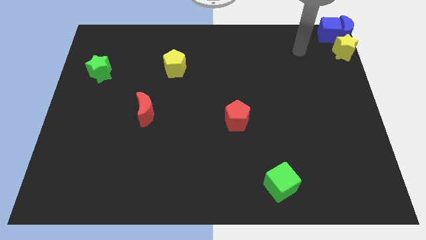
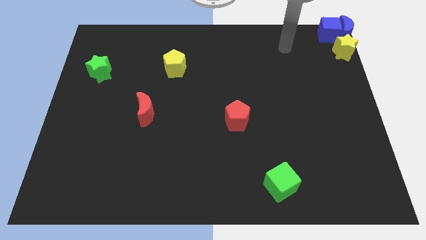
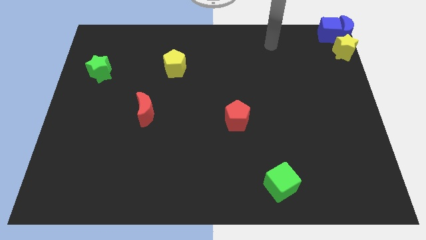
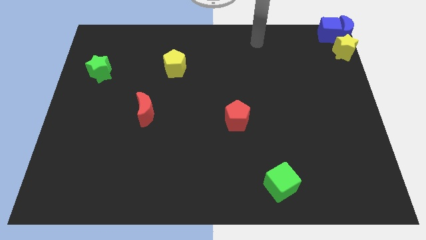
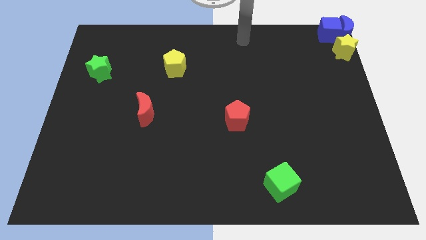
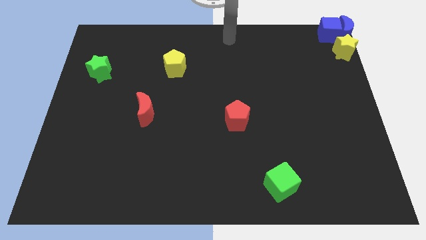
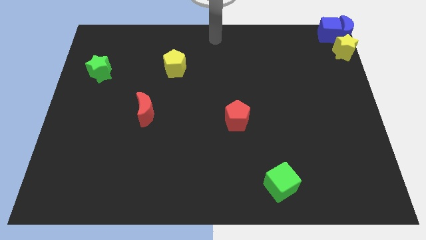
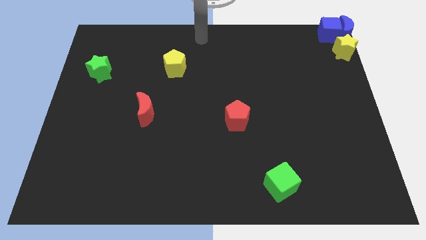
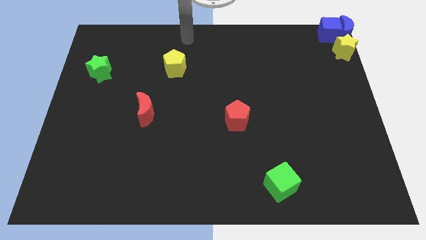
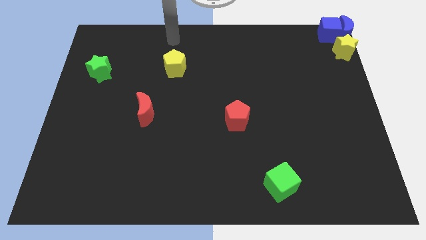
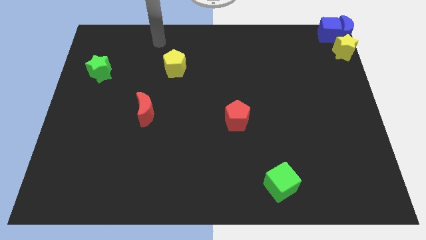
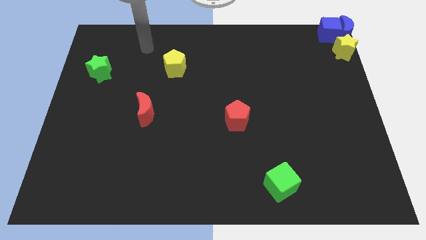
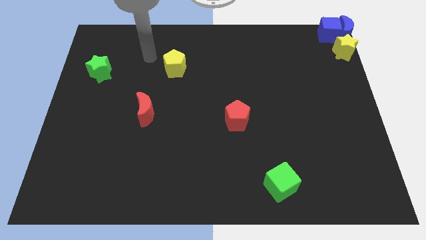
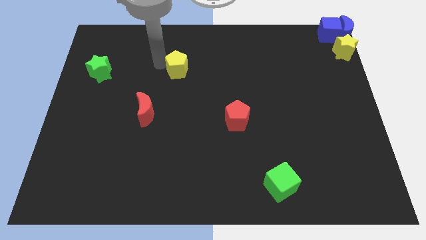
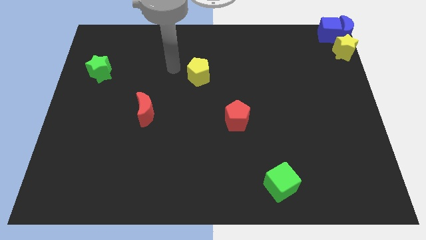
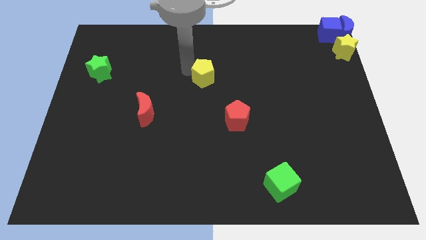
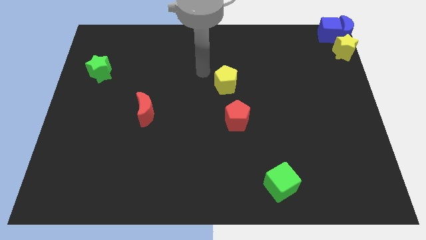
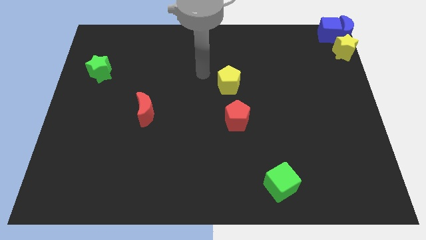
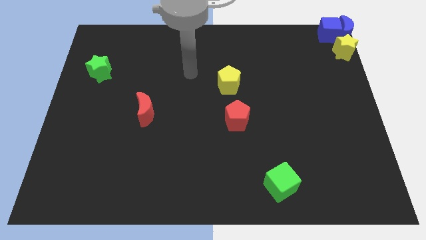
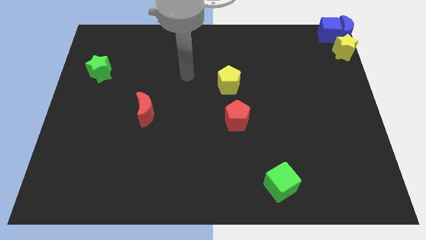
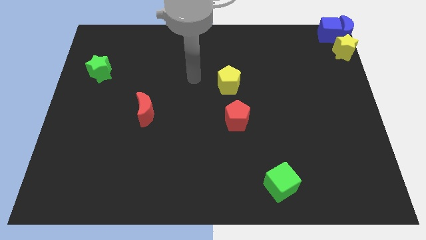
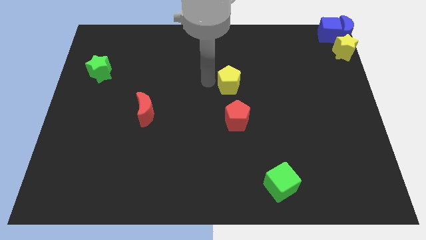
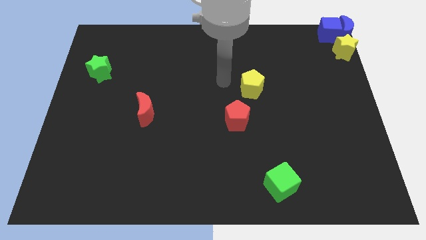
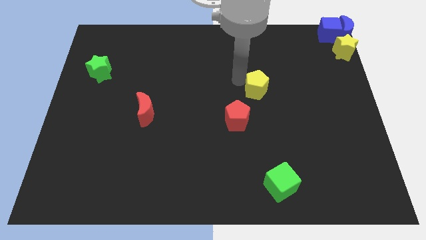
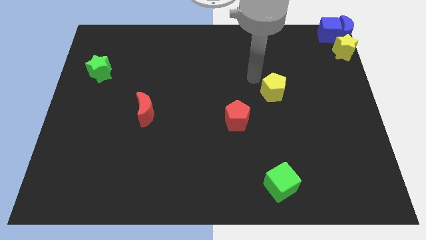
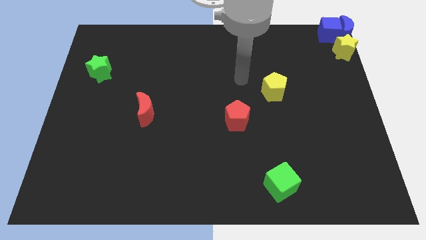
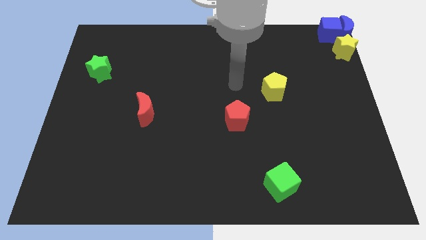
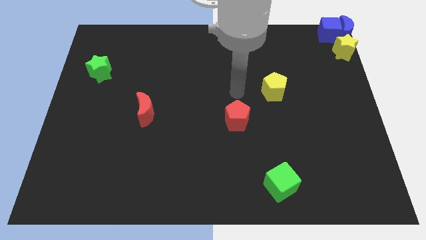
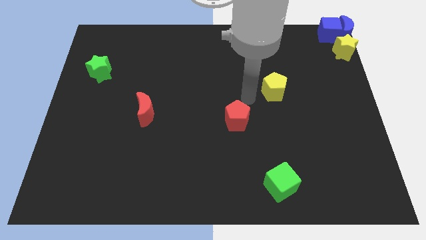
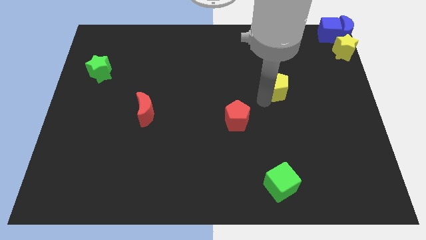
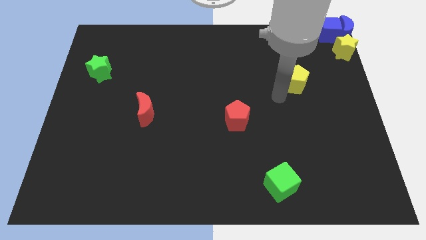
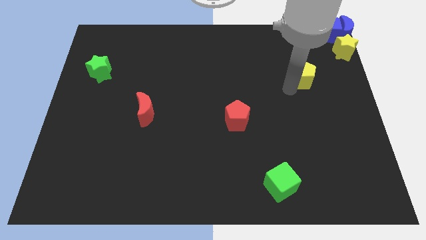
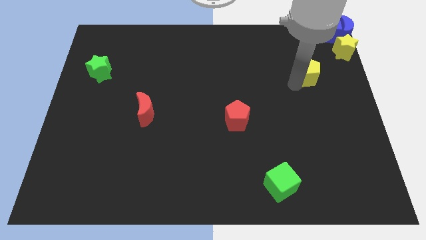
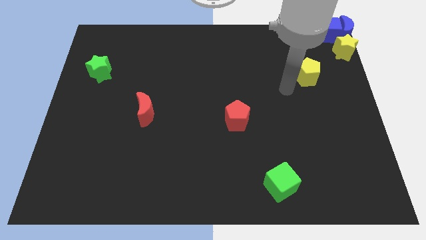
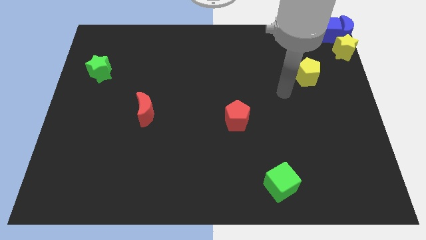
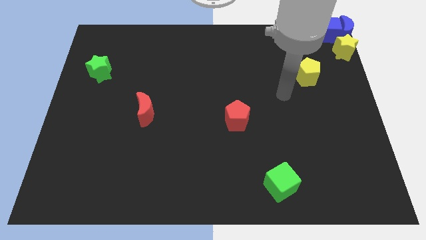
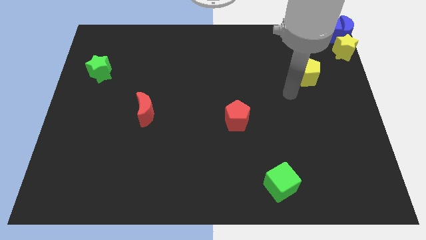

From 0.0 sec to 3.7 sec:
place the yellow pentagon in between the yellow star and red pentagon

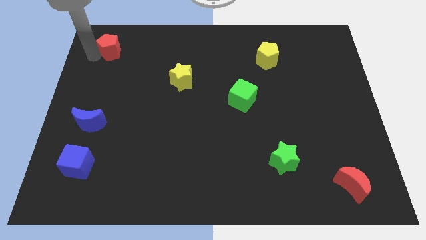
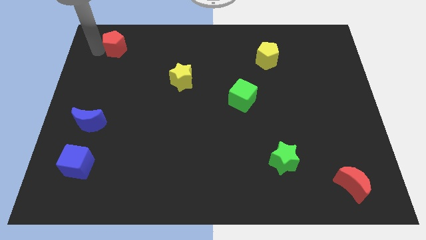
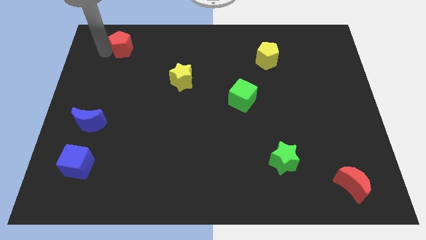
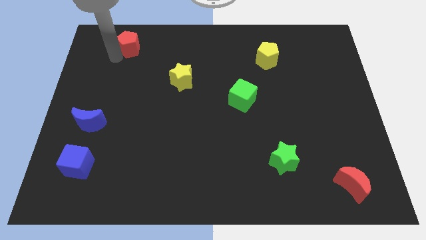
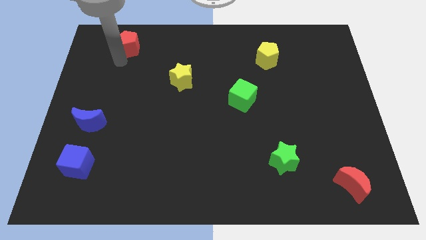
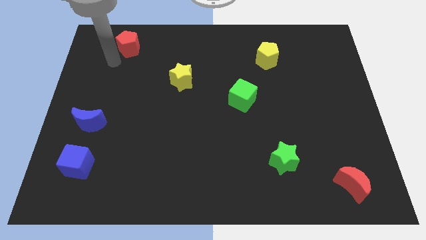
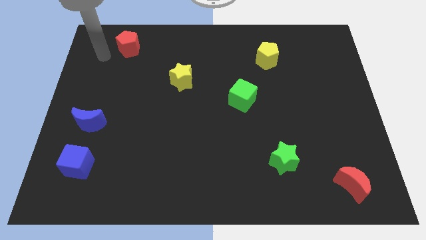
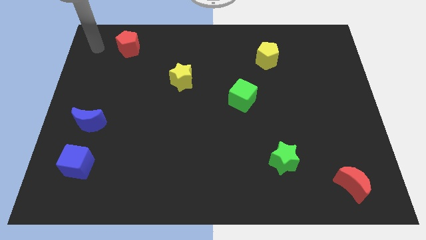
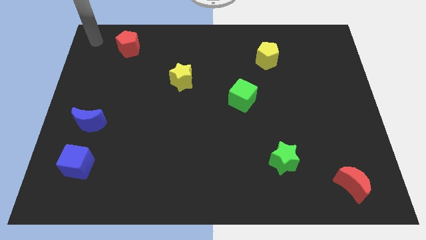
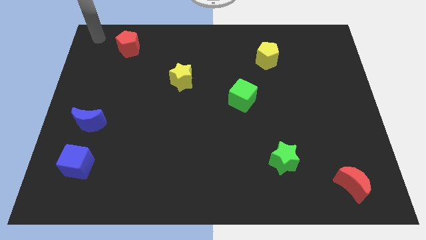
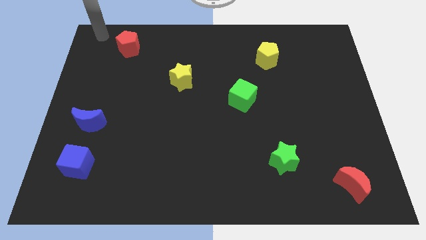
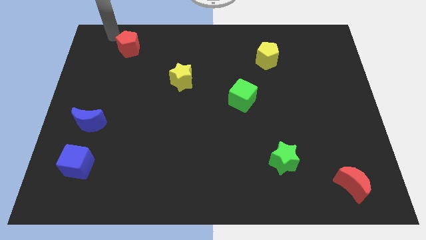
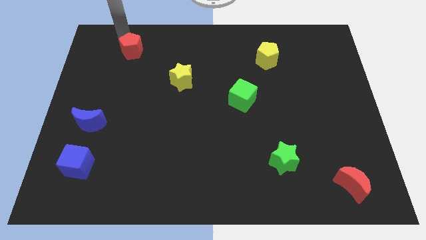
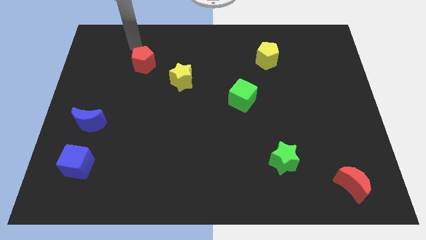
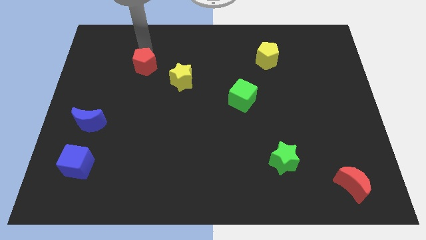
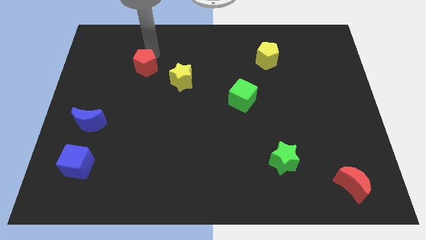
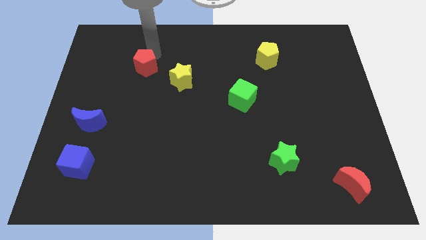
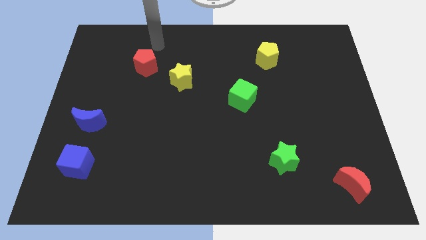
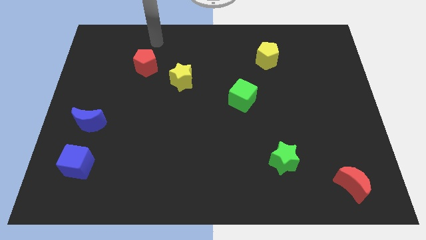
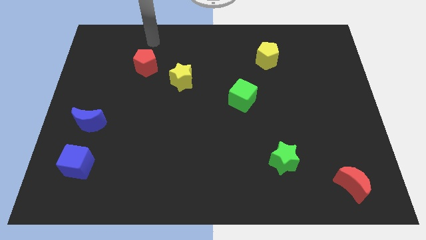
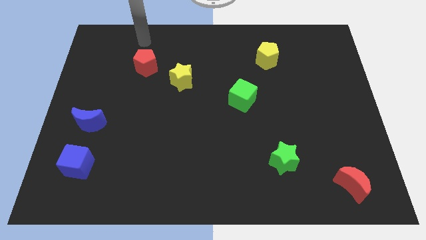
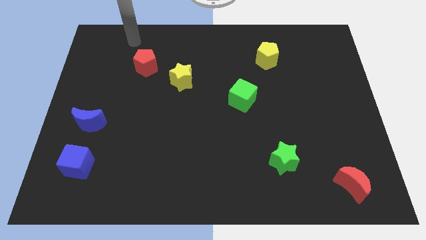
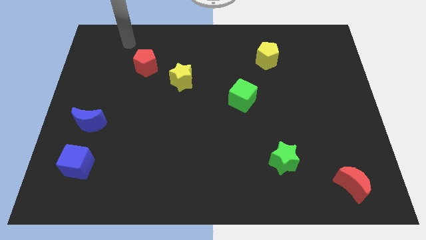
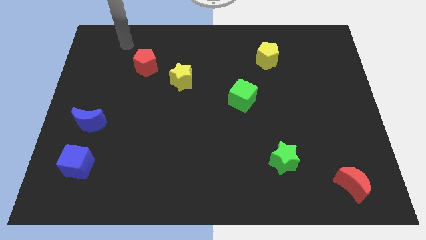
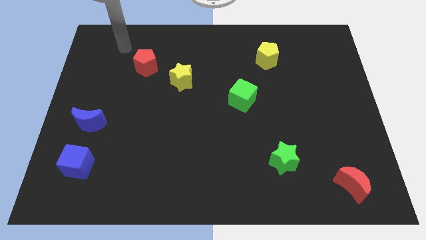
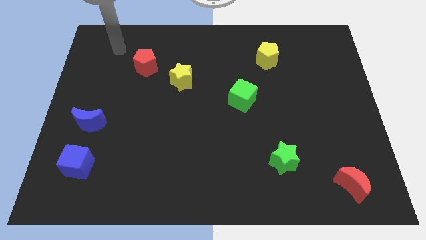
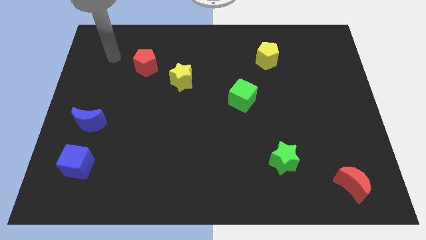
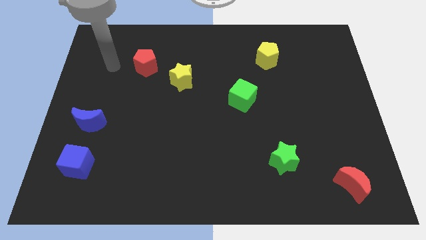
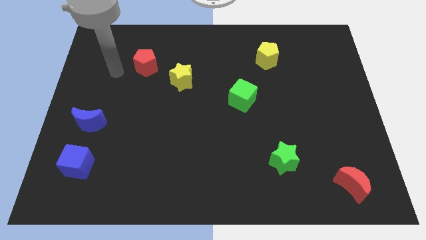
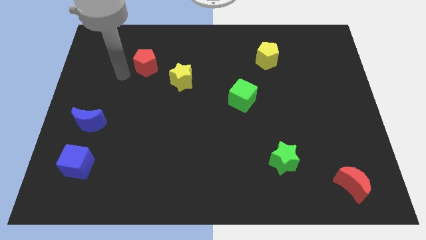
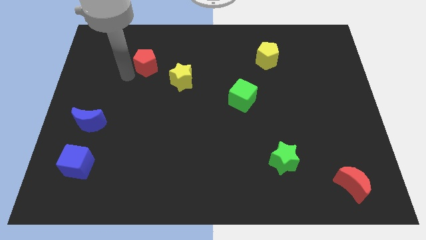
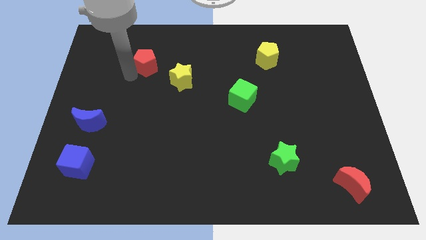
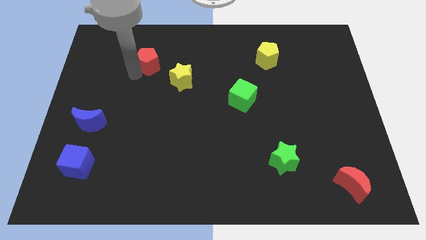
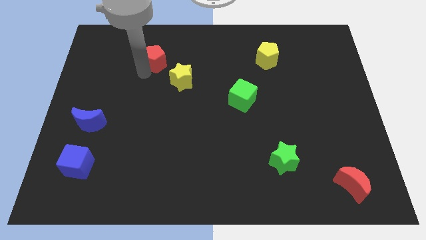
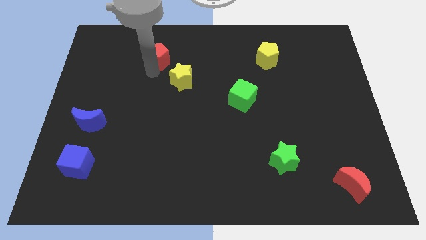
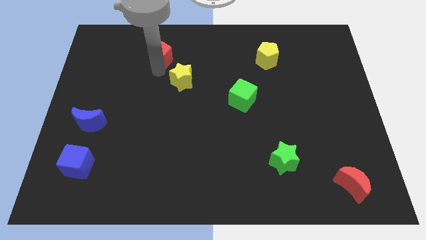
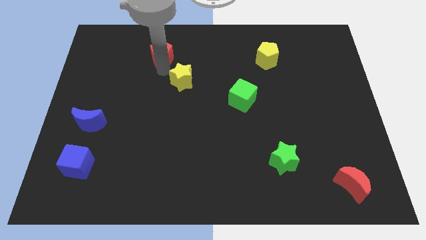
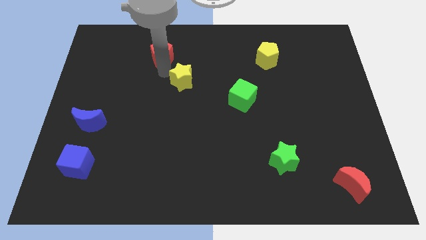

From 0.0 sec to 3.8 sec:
push the red pentagon into the yellow star

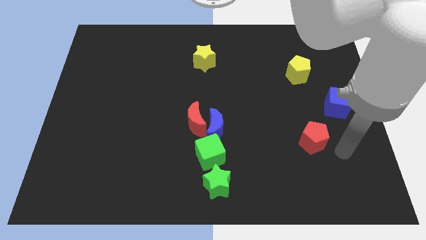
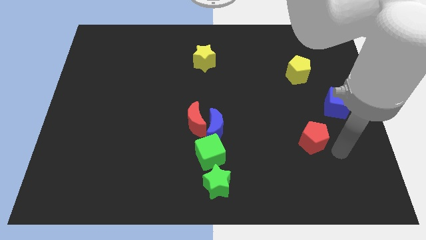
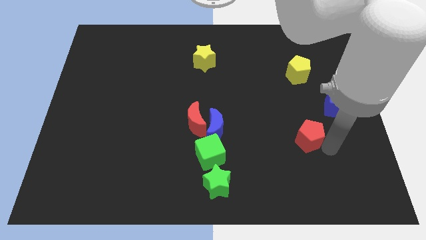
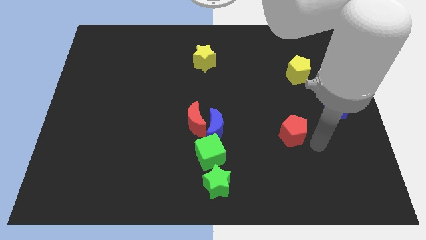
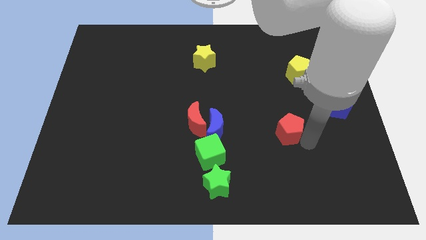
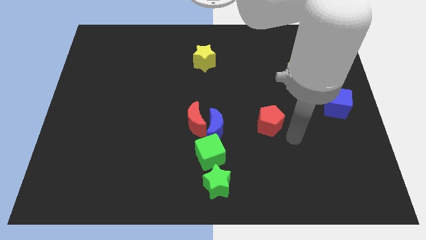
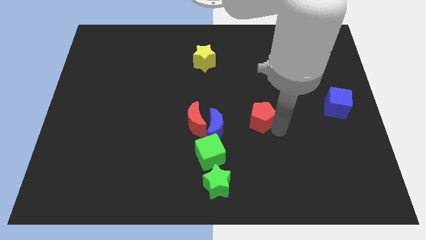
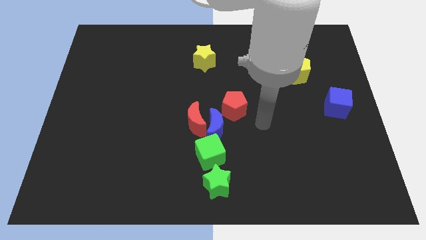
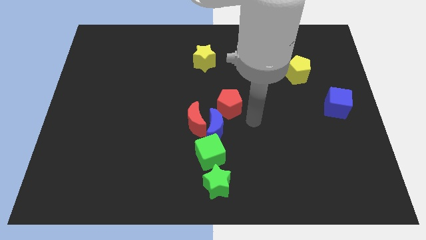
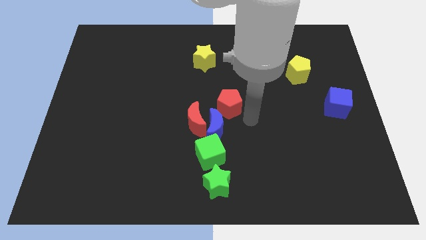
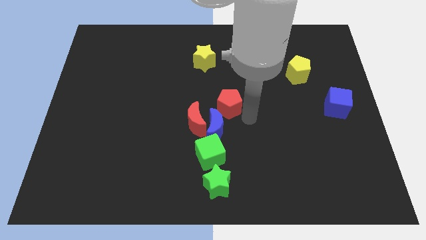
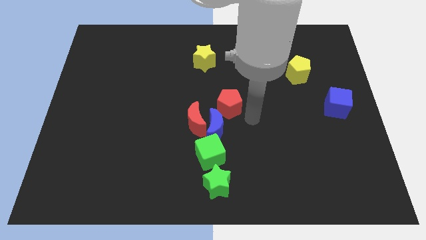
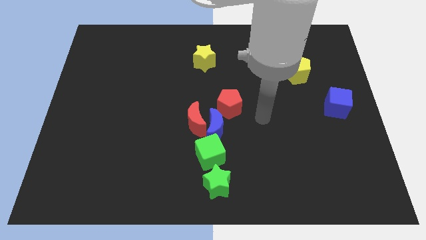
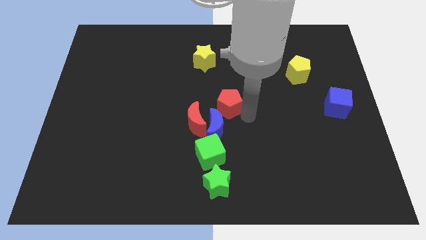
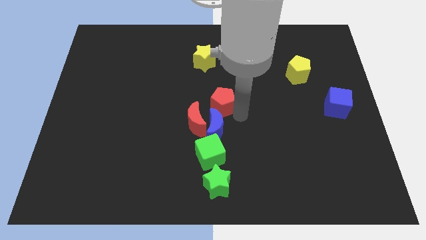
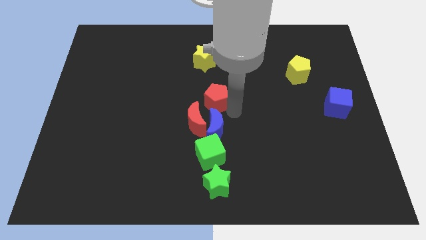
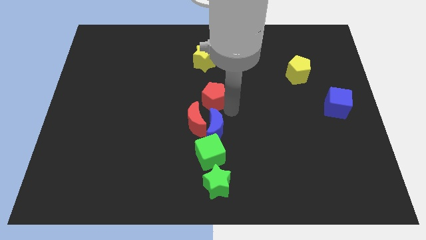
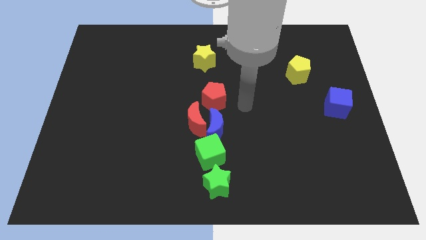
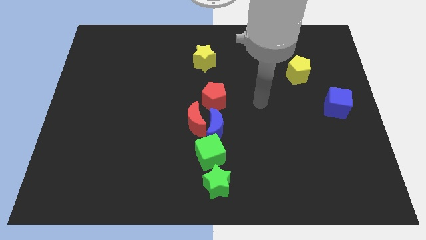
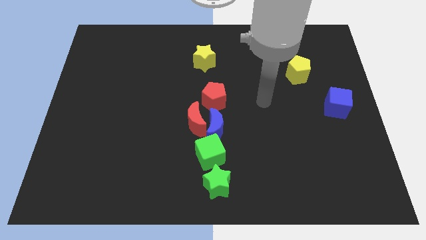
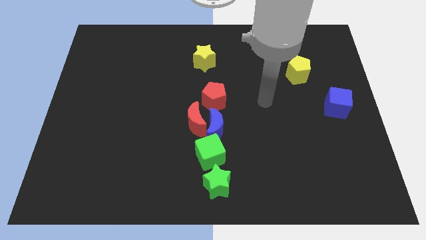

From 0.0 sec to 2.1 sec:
place the red pentagon vertically below the yellow pentagon
